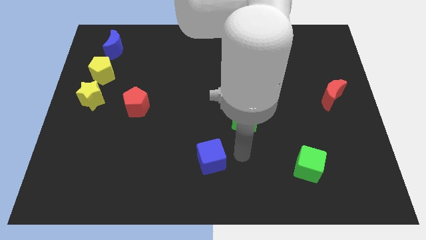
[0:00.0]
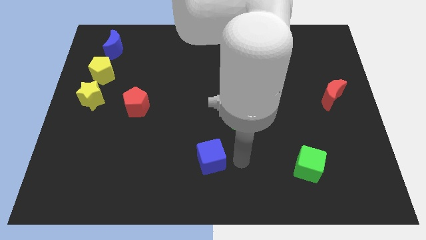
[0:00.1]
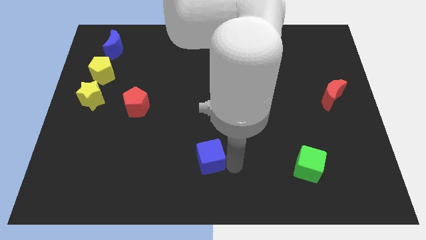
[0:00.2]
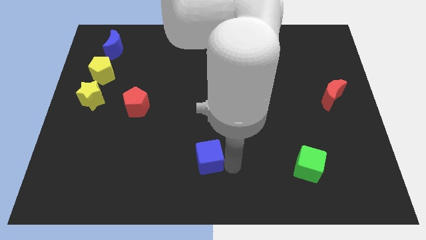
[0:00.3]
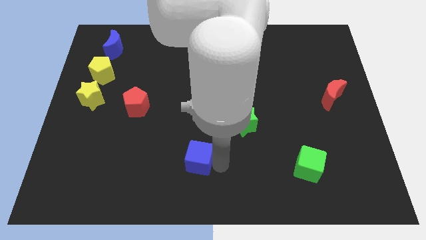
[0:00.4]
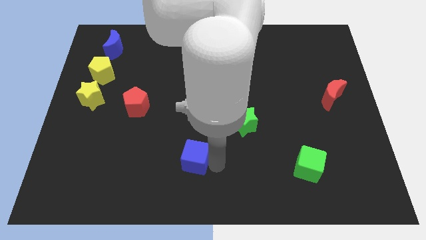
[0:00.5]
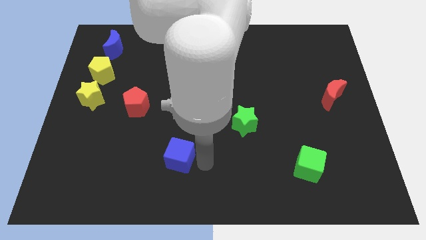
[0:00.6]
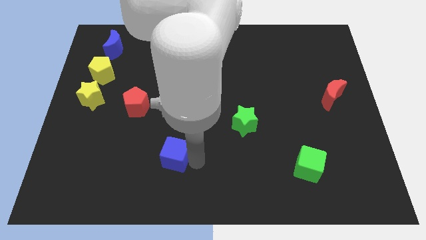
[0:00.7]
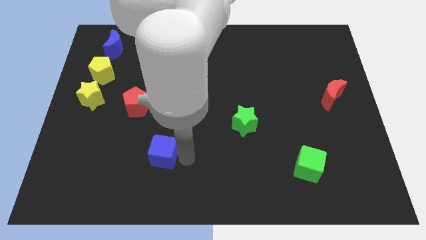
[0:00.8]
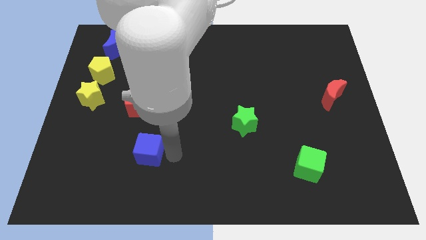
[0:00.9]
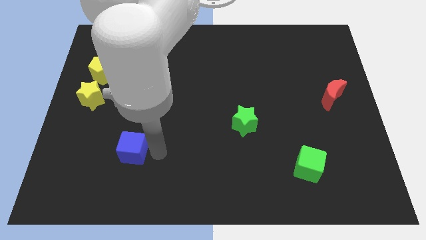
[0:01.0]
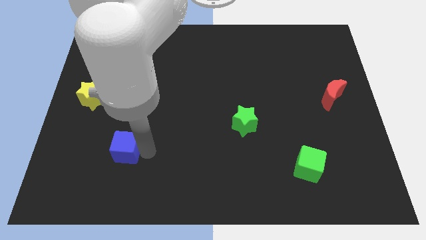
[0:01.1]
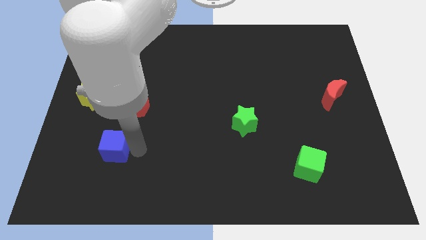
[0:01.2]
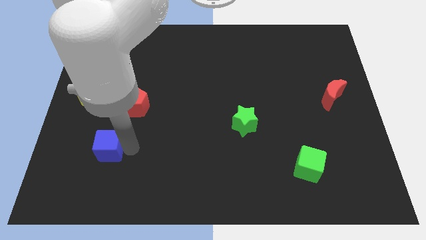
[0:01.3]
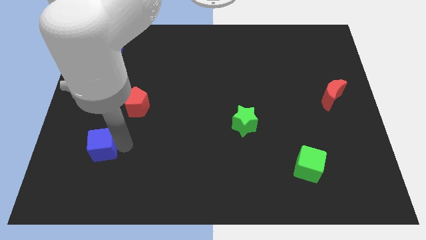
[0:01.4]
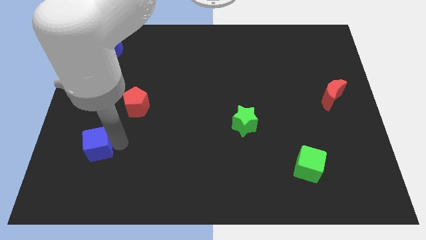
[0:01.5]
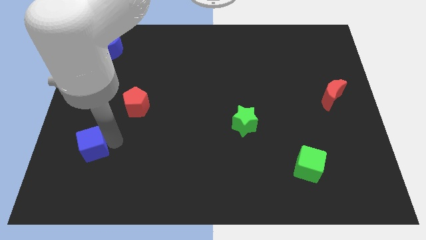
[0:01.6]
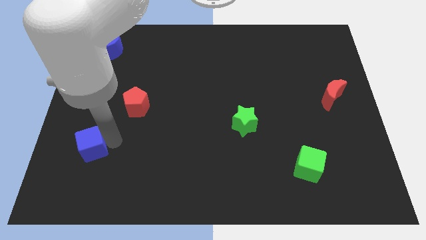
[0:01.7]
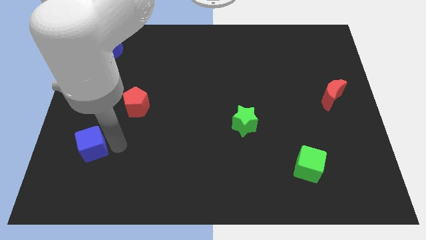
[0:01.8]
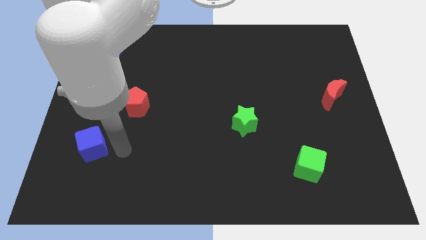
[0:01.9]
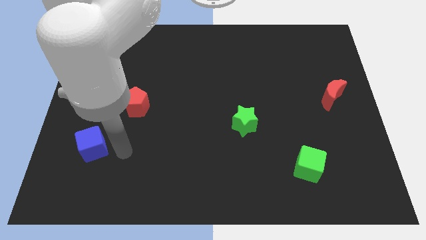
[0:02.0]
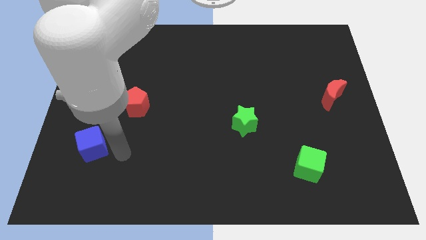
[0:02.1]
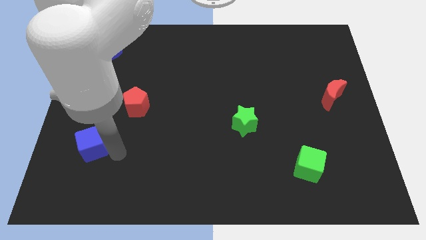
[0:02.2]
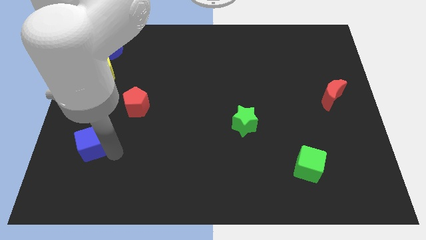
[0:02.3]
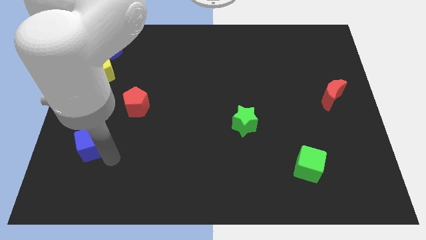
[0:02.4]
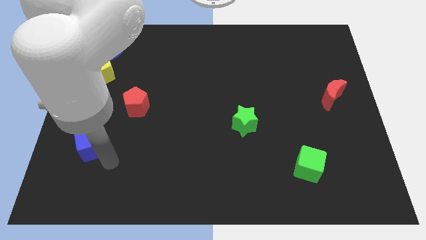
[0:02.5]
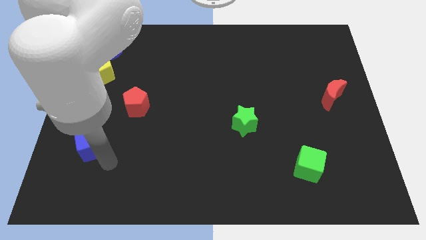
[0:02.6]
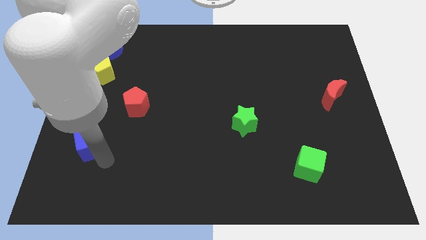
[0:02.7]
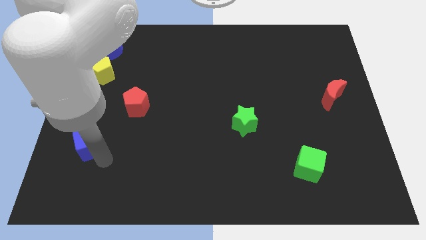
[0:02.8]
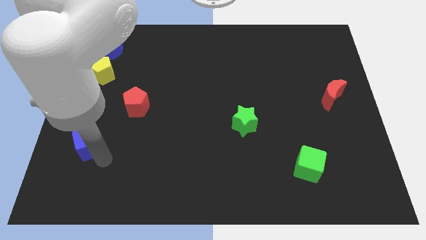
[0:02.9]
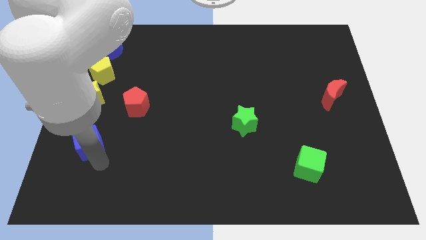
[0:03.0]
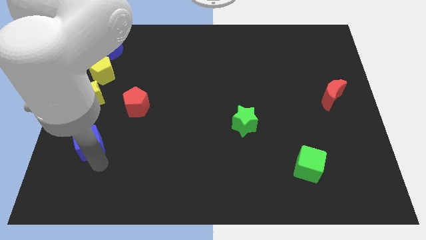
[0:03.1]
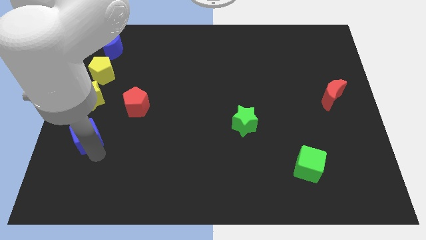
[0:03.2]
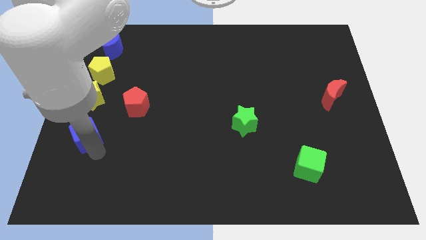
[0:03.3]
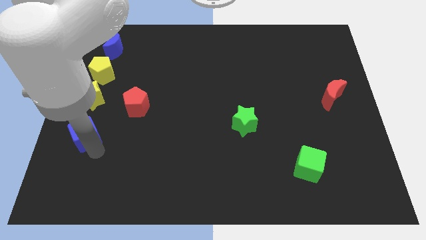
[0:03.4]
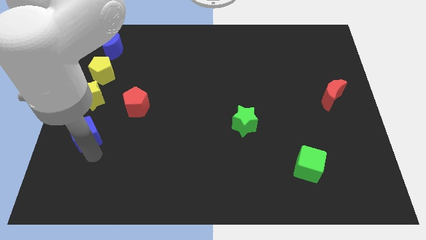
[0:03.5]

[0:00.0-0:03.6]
put the blue cube below the yellow star

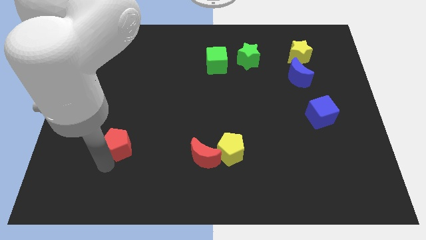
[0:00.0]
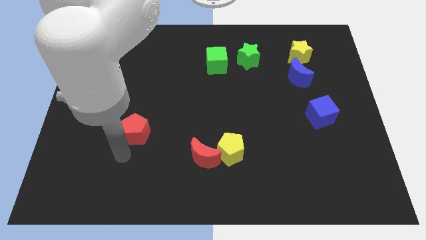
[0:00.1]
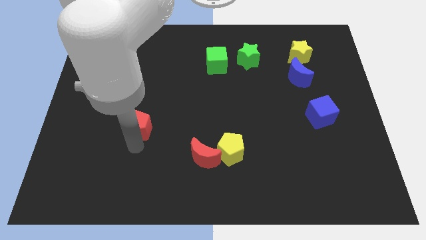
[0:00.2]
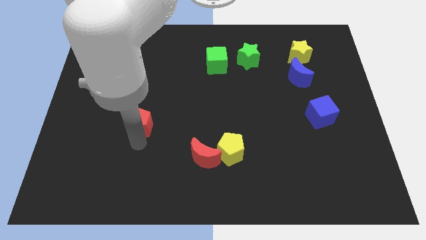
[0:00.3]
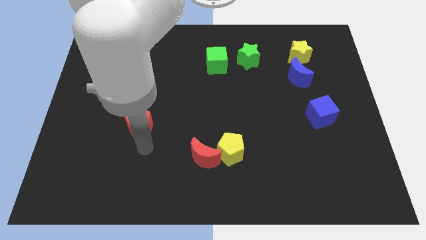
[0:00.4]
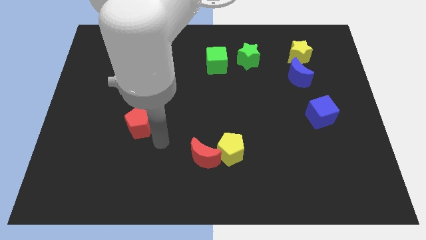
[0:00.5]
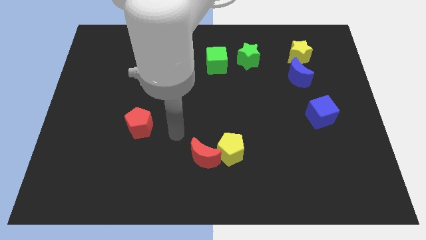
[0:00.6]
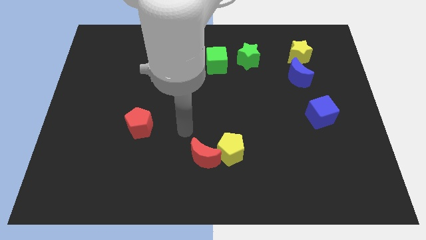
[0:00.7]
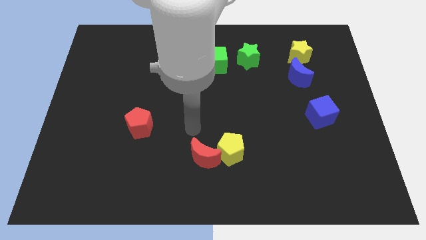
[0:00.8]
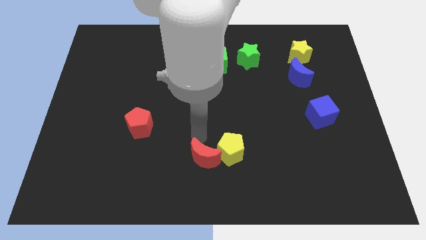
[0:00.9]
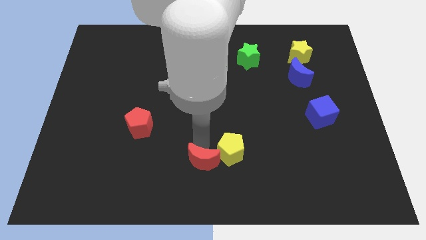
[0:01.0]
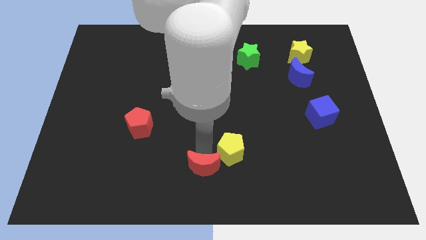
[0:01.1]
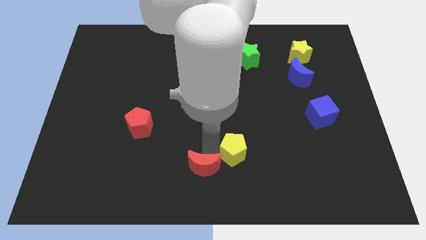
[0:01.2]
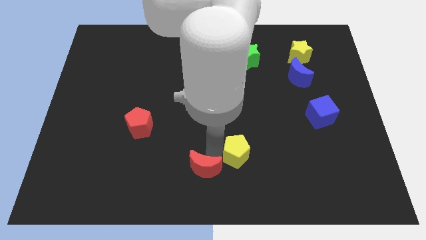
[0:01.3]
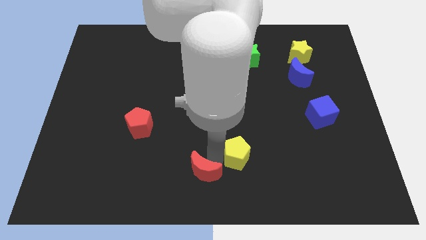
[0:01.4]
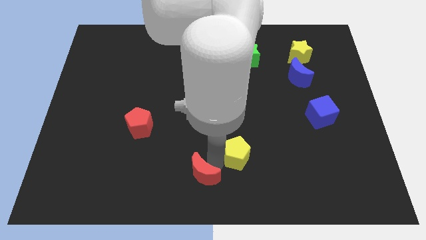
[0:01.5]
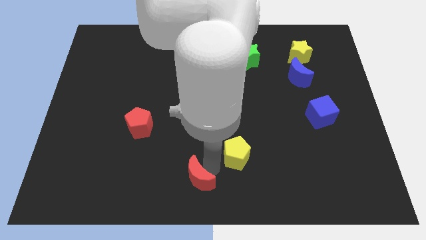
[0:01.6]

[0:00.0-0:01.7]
separate red moon from yellow pentagon

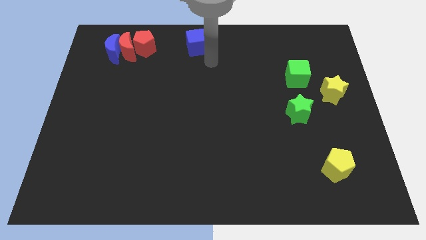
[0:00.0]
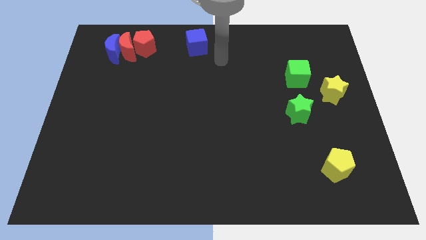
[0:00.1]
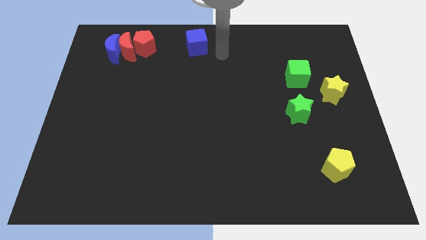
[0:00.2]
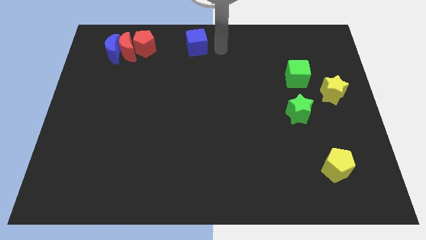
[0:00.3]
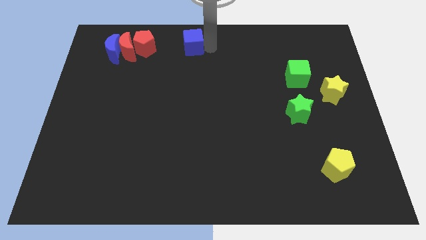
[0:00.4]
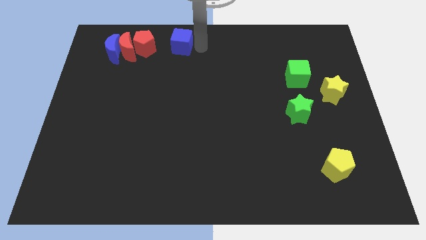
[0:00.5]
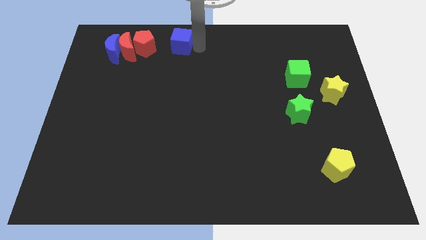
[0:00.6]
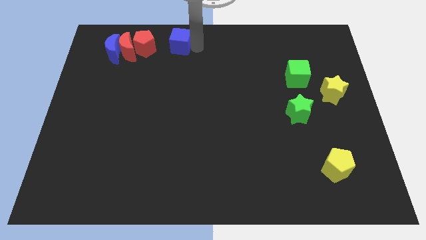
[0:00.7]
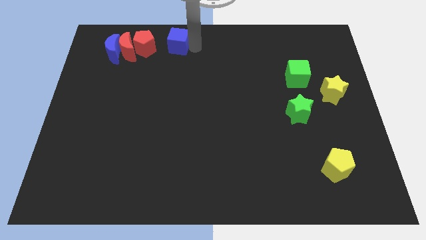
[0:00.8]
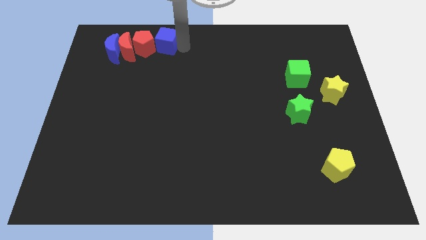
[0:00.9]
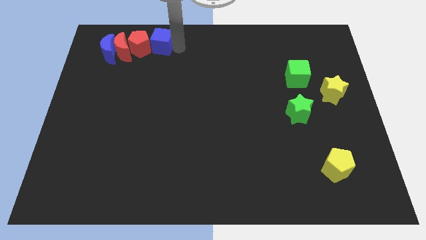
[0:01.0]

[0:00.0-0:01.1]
move blue cube in to red pentagon

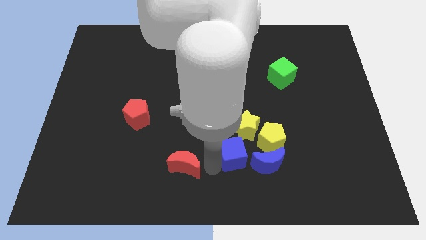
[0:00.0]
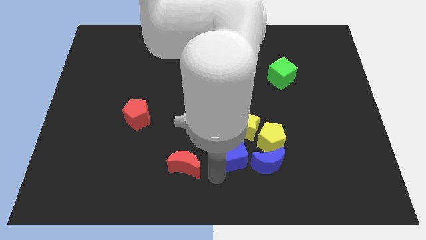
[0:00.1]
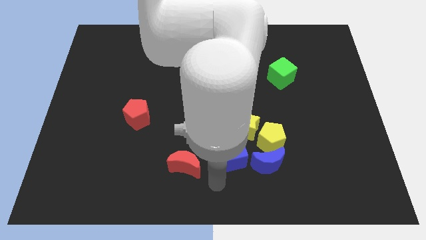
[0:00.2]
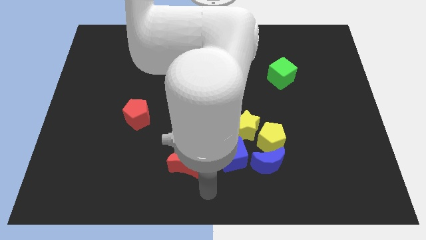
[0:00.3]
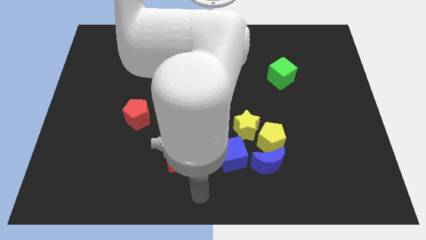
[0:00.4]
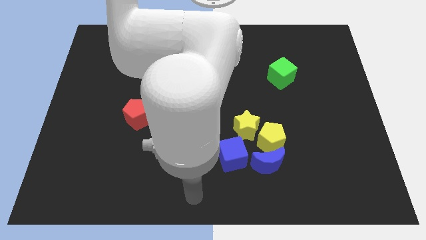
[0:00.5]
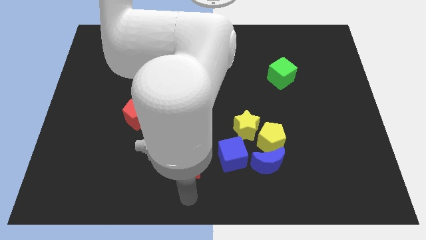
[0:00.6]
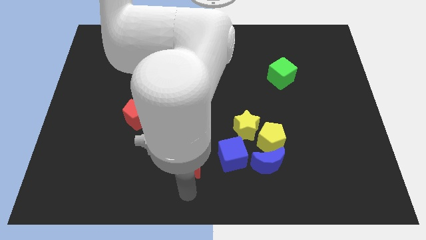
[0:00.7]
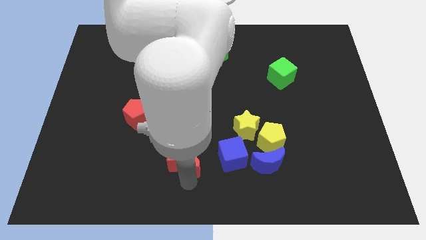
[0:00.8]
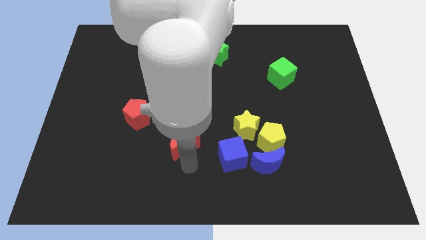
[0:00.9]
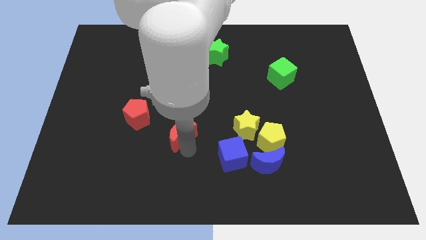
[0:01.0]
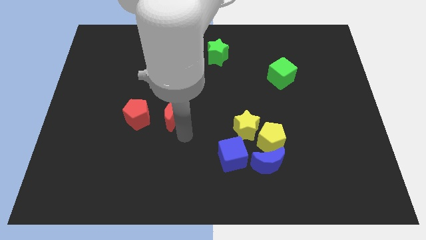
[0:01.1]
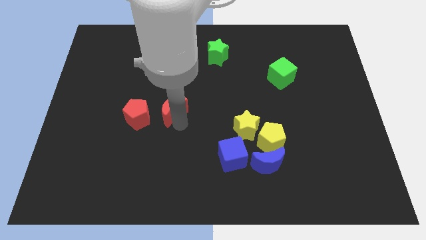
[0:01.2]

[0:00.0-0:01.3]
push the red moon right to the red pentagon

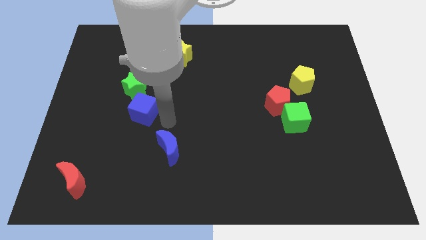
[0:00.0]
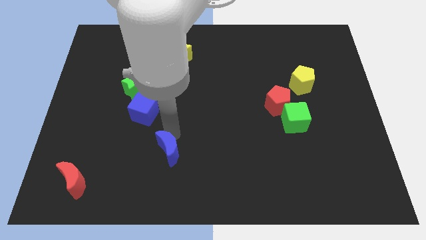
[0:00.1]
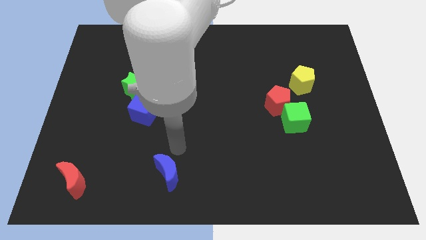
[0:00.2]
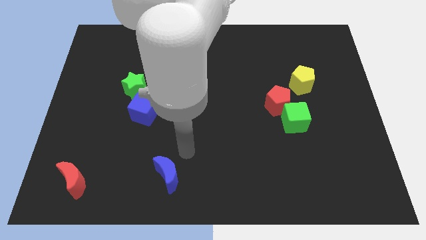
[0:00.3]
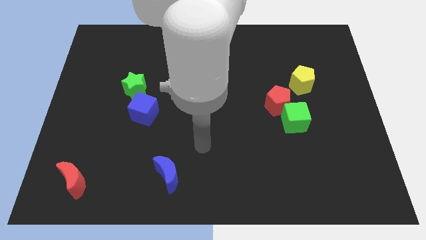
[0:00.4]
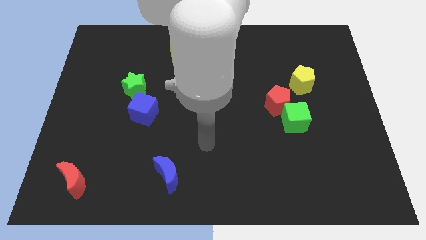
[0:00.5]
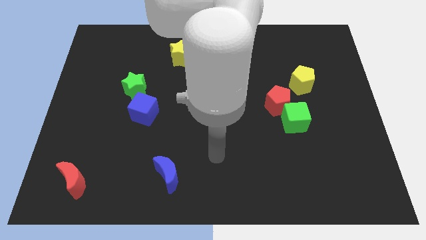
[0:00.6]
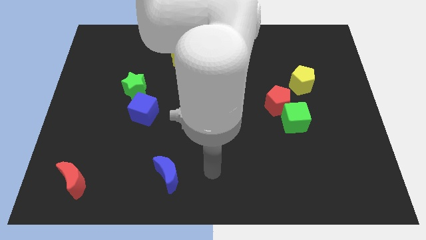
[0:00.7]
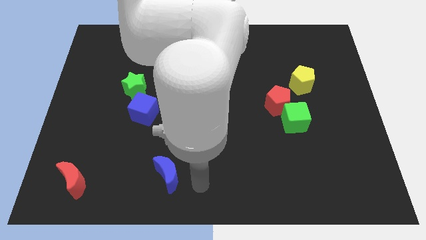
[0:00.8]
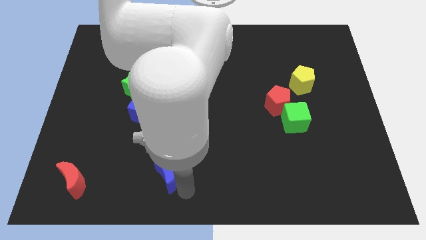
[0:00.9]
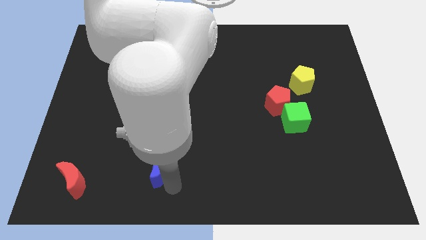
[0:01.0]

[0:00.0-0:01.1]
place the blue moon right to the red moon
